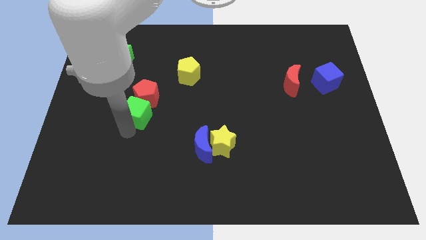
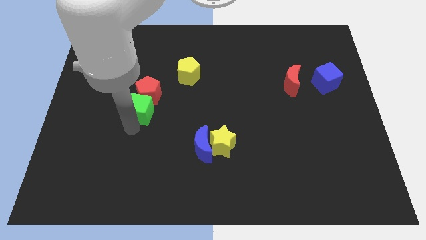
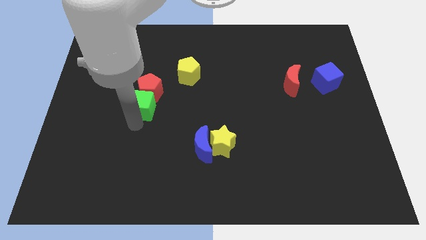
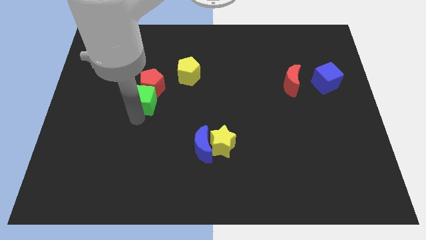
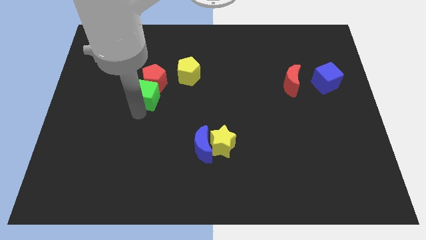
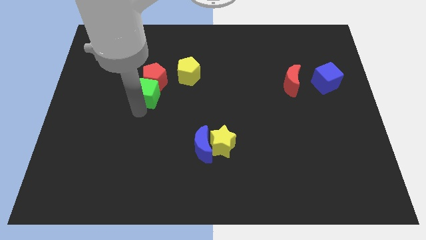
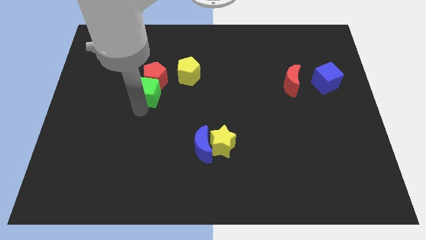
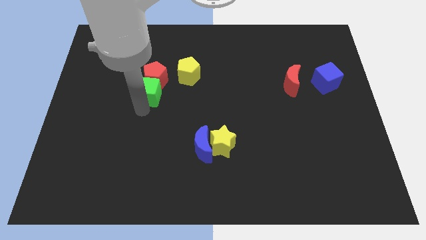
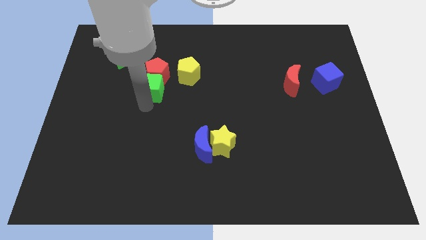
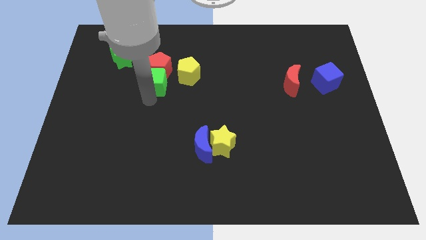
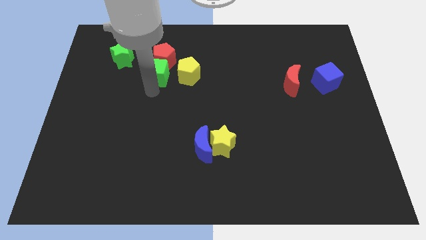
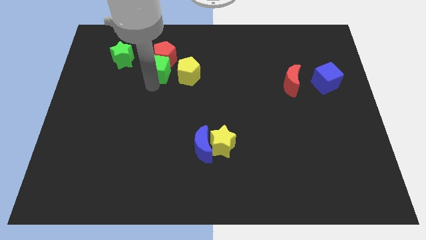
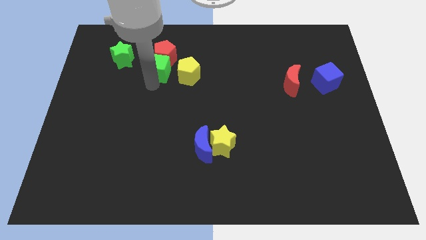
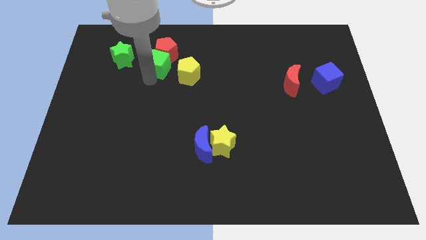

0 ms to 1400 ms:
slide the green cube parallel left to the yellow pentagon

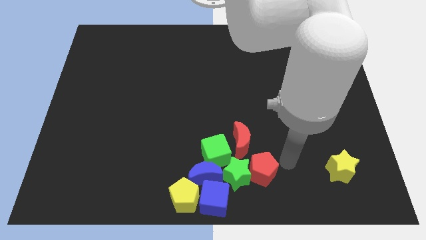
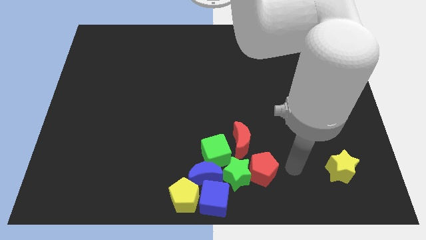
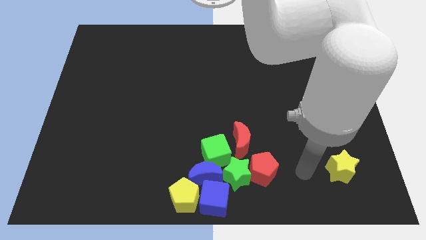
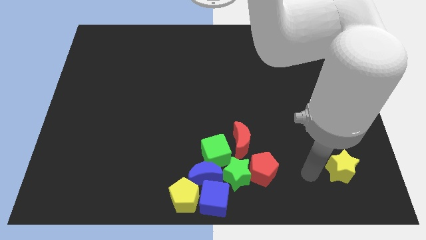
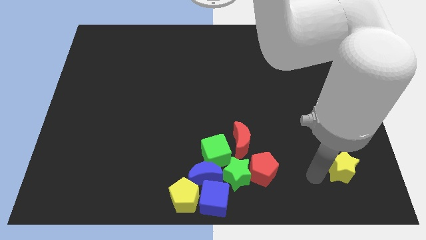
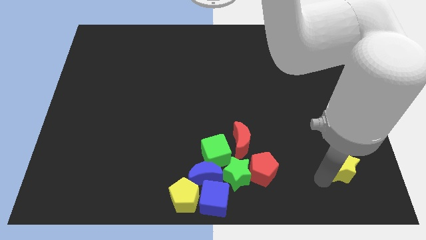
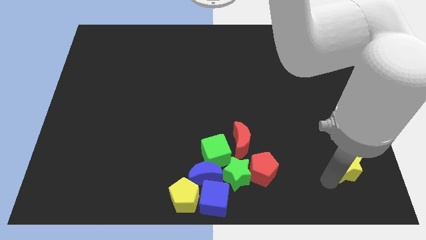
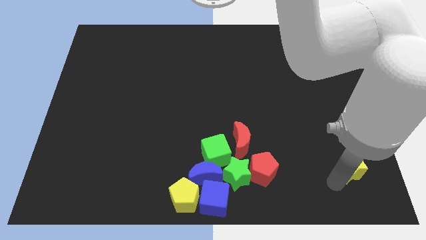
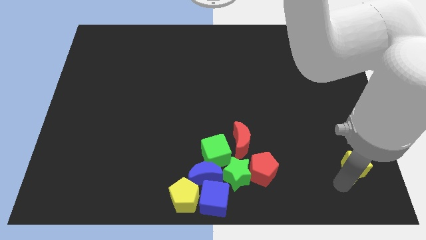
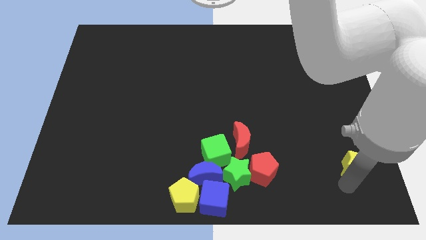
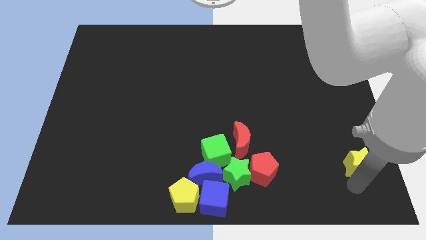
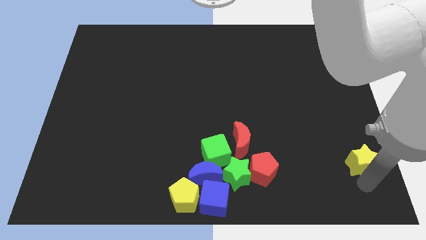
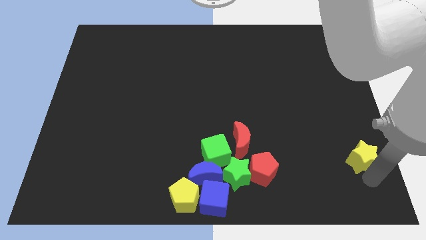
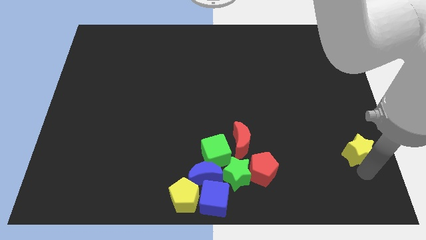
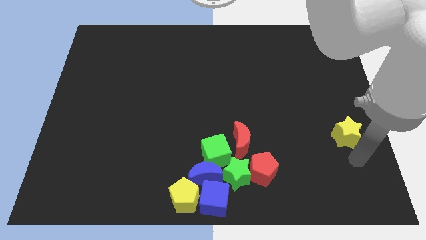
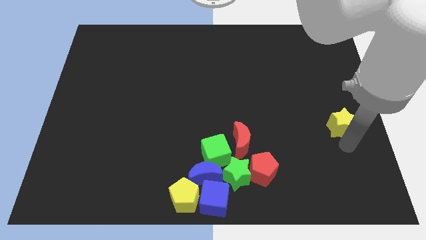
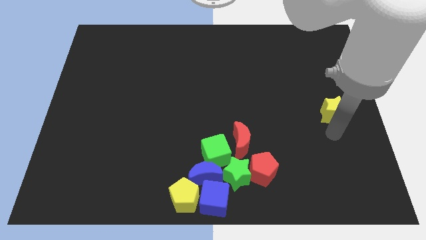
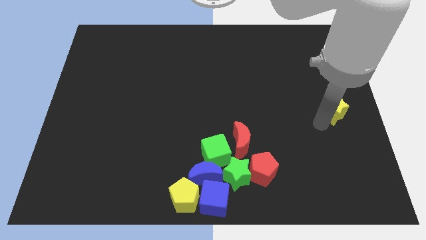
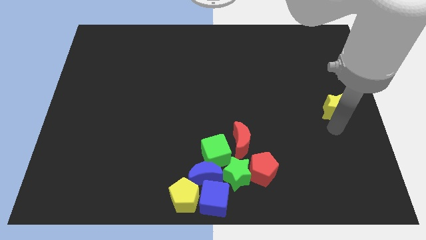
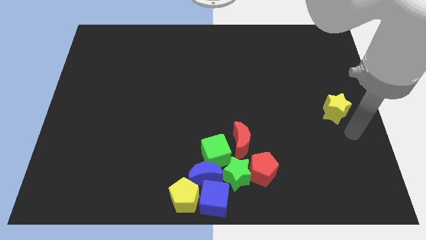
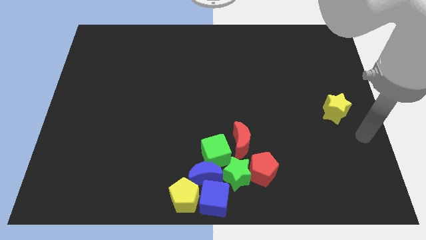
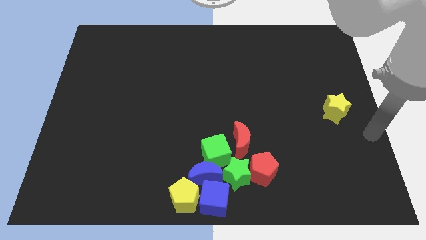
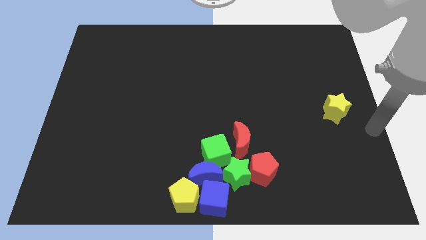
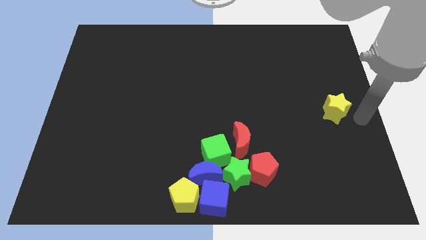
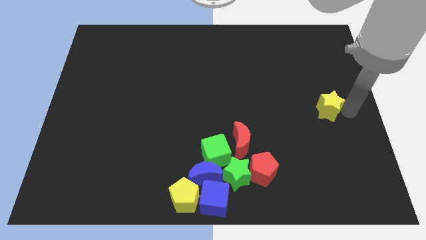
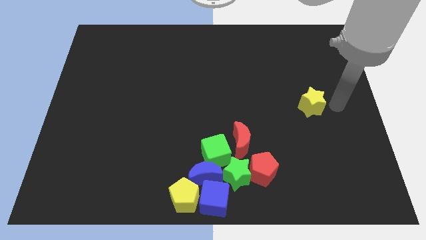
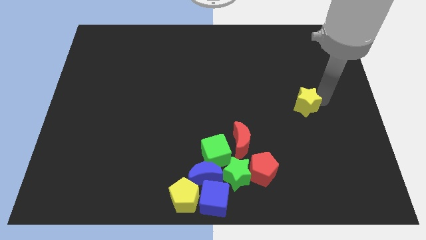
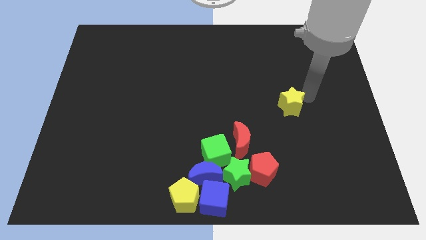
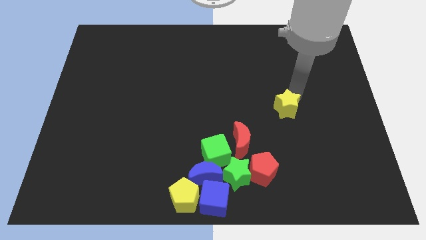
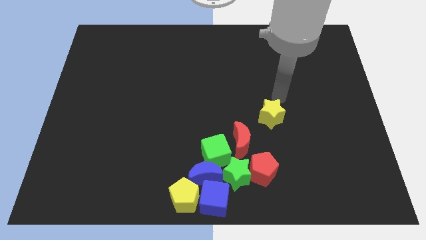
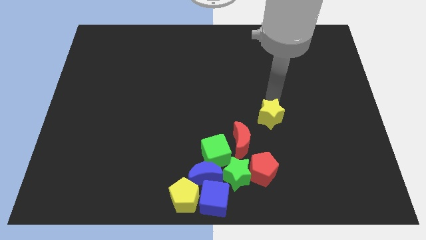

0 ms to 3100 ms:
push the yellow star diagonally right to the red crescent

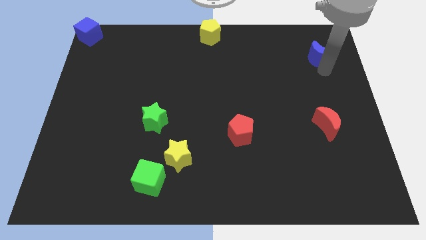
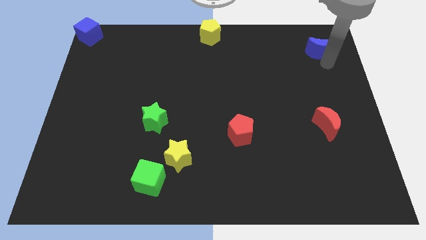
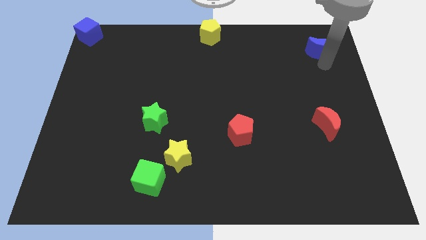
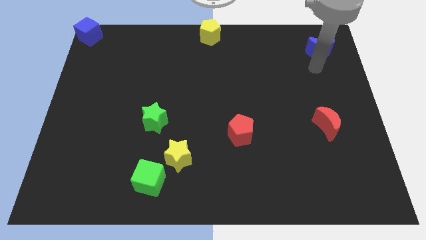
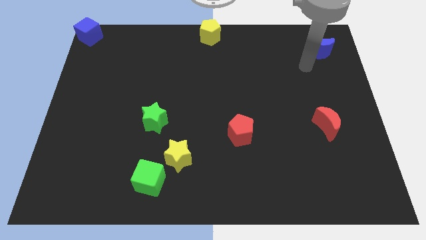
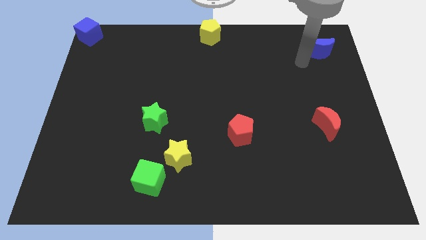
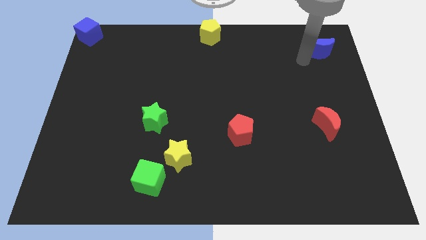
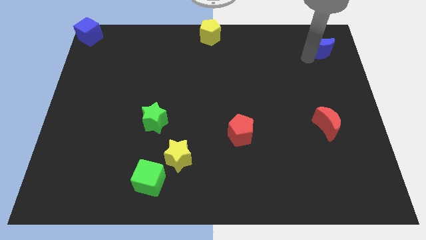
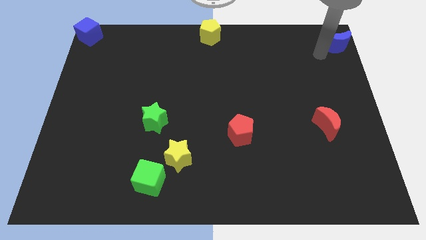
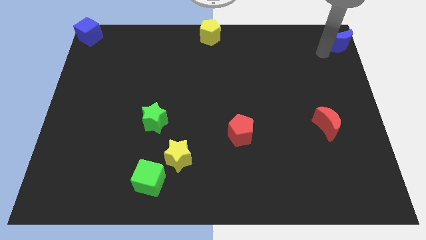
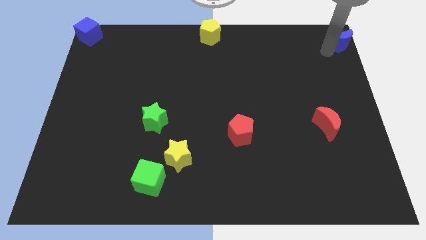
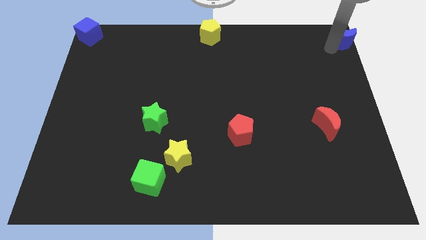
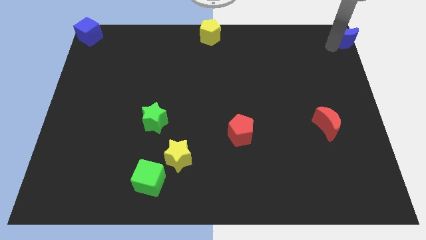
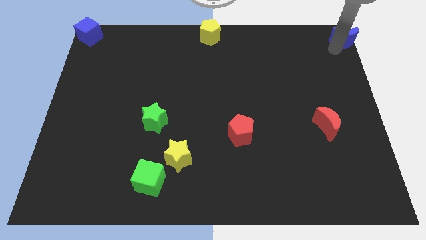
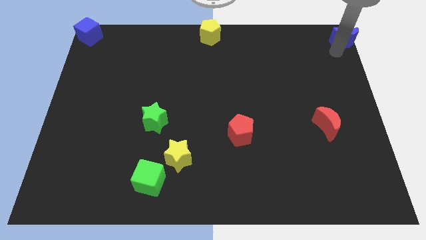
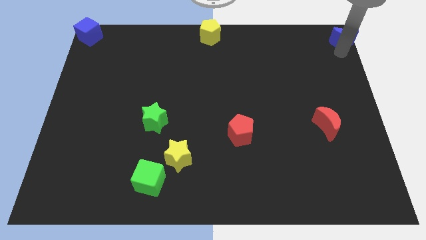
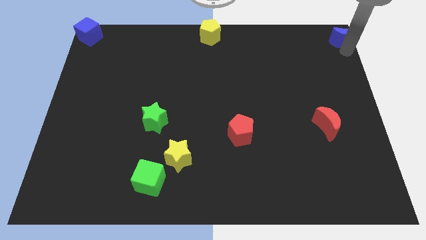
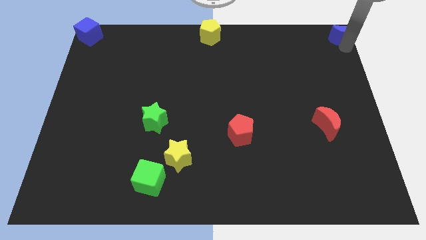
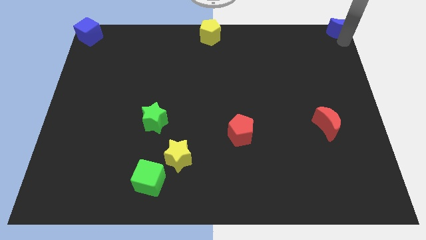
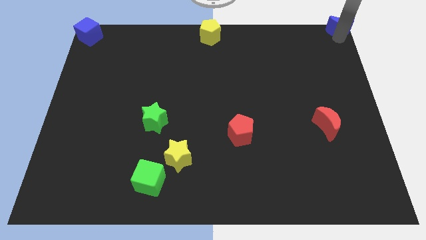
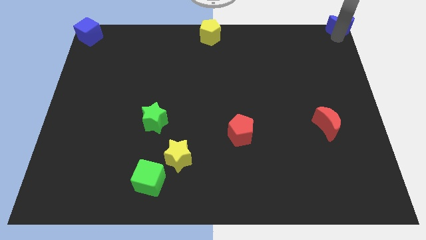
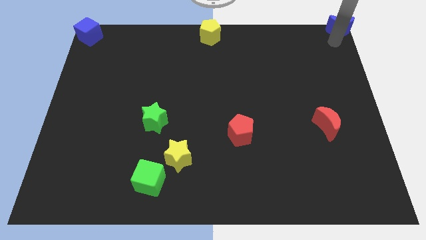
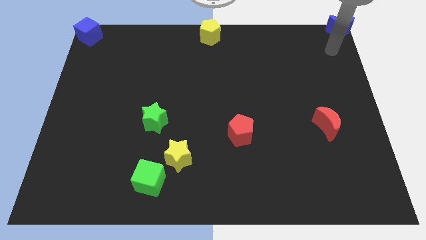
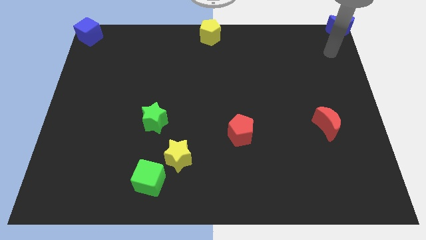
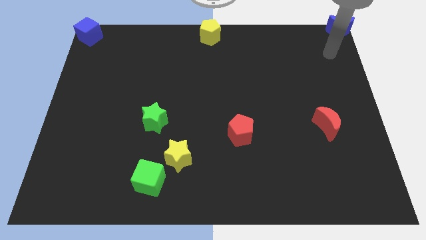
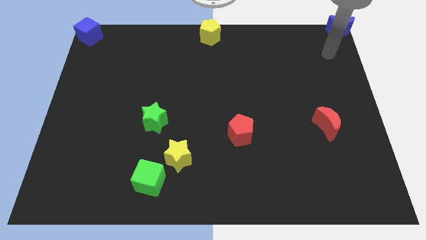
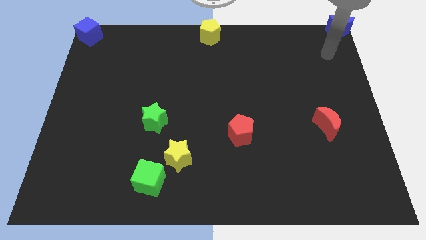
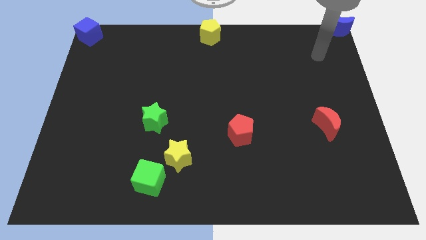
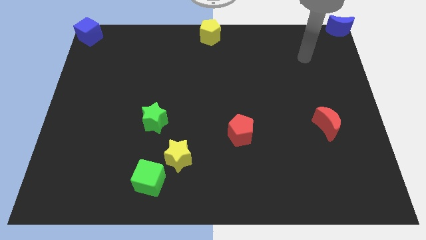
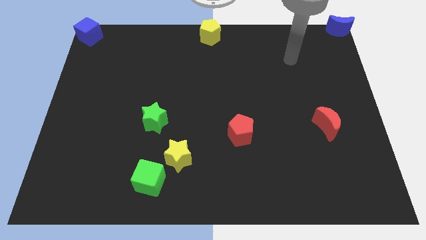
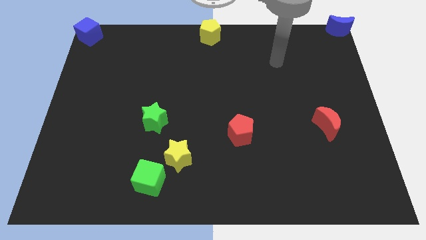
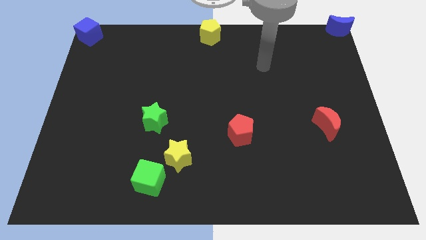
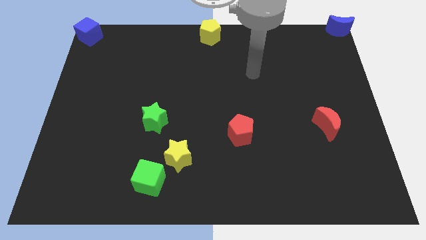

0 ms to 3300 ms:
place the blue crescent at the top right corner

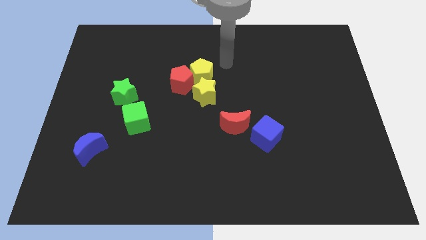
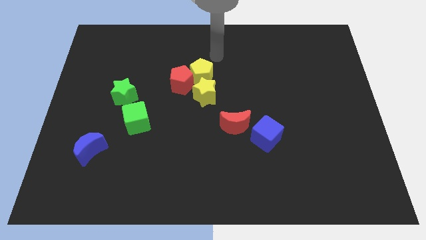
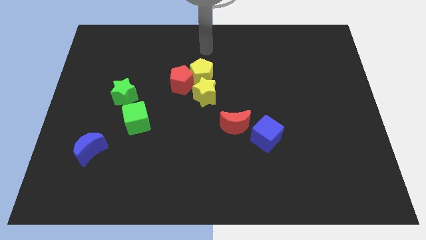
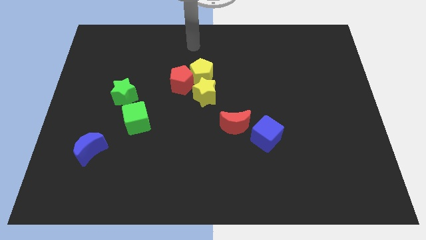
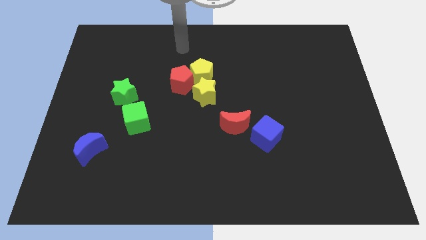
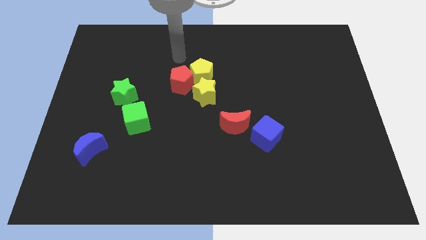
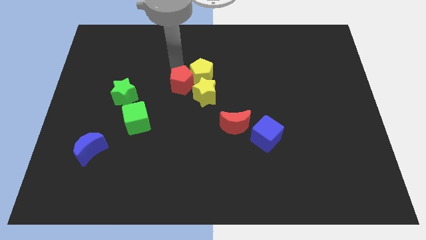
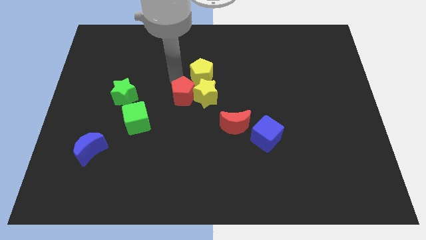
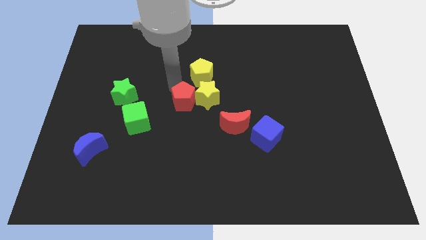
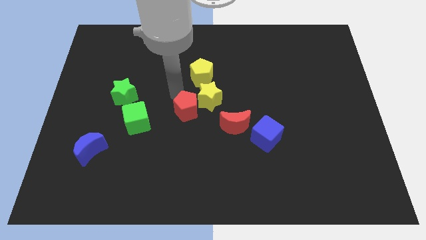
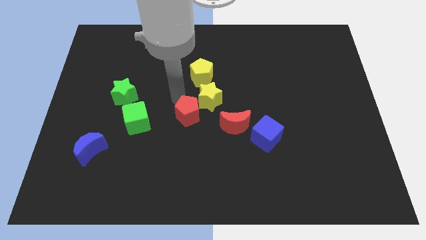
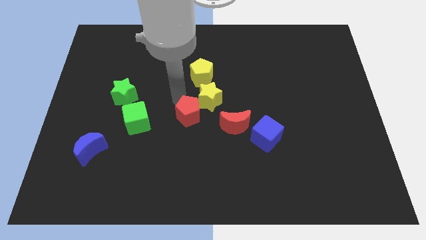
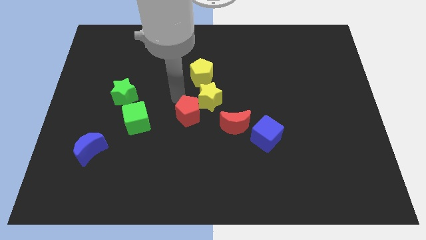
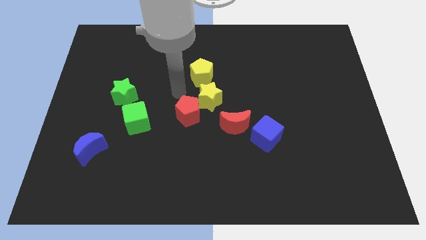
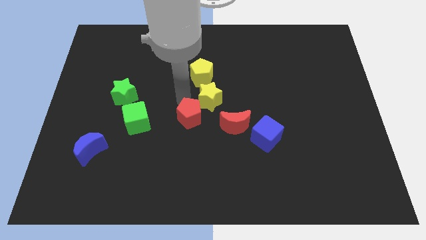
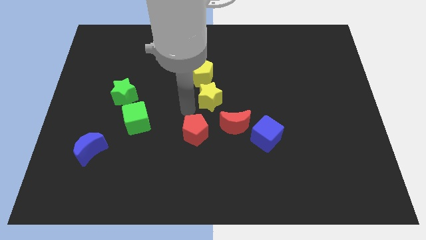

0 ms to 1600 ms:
place red pentagon at the left of red moon
